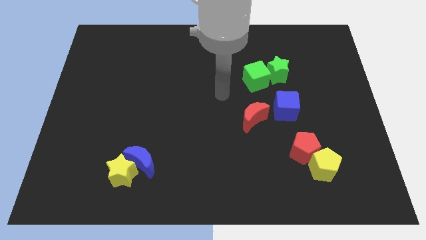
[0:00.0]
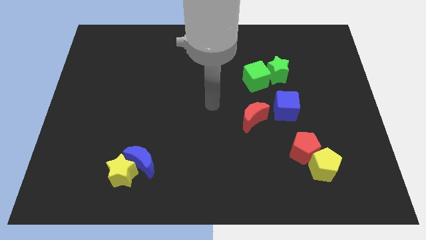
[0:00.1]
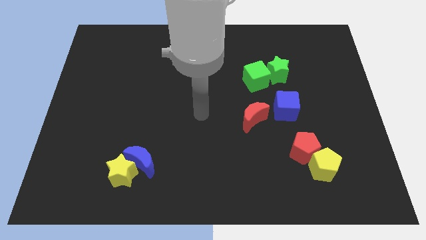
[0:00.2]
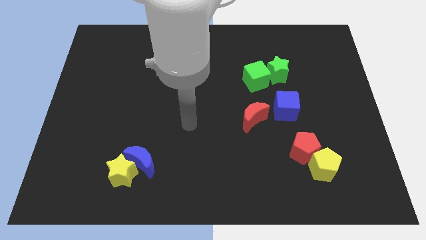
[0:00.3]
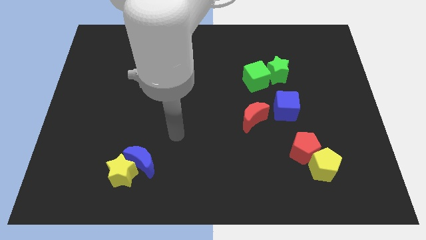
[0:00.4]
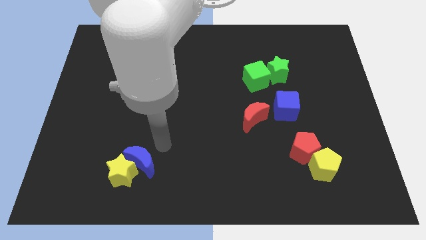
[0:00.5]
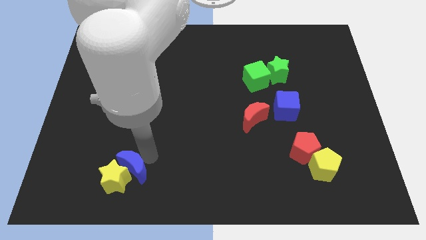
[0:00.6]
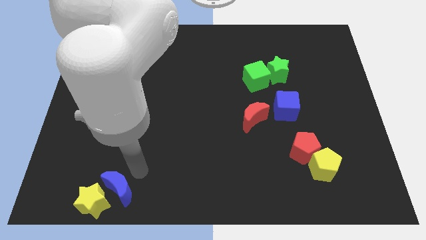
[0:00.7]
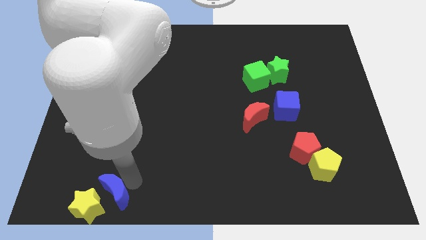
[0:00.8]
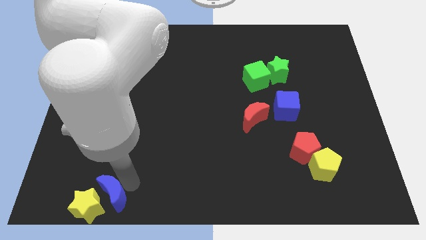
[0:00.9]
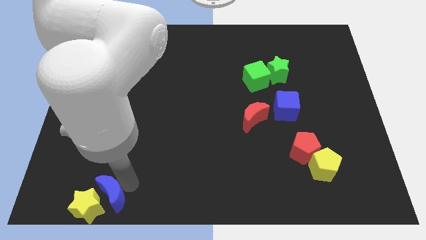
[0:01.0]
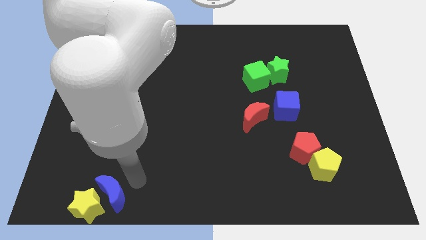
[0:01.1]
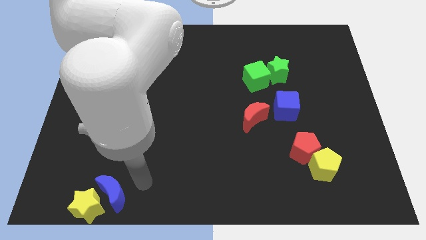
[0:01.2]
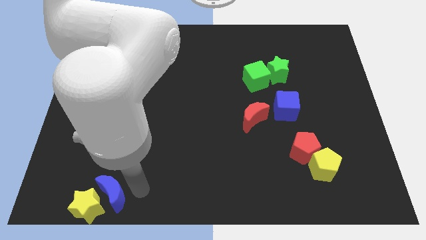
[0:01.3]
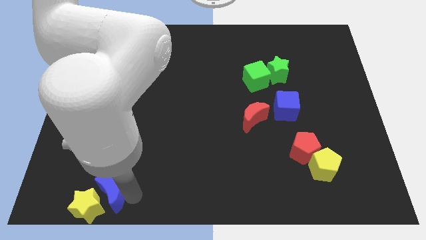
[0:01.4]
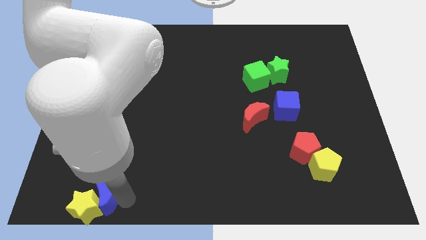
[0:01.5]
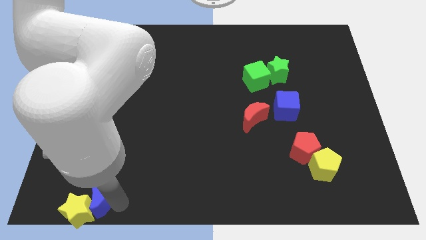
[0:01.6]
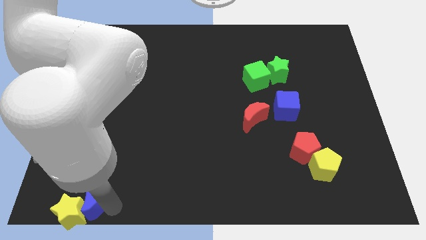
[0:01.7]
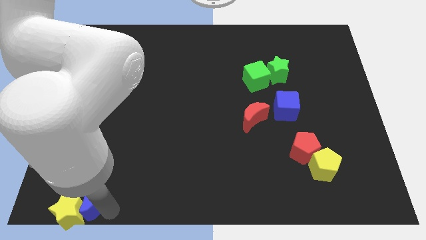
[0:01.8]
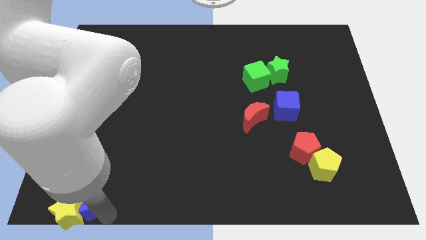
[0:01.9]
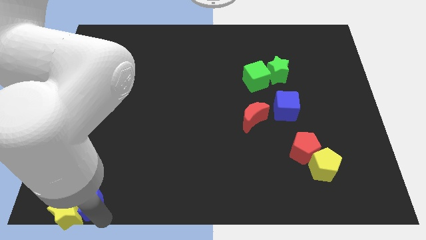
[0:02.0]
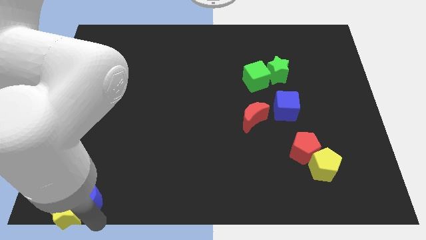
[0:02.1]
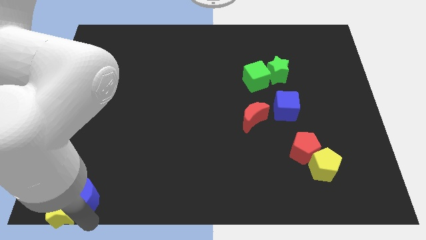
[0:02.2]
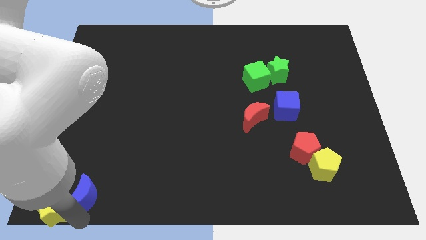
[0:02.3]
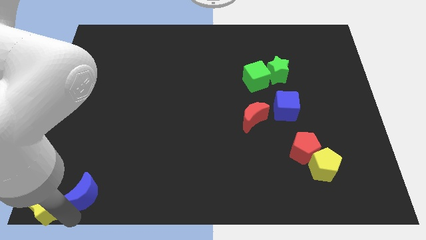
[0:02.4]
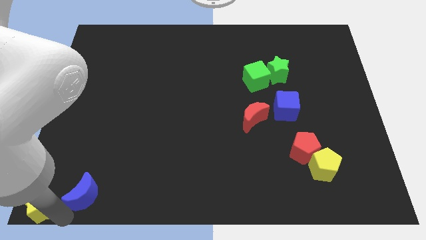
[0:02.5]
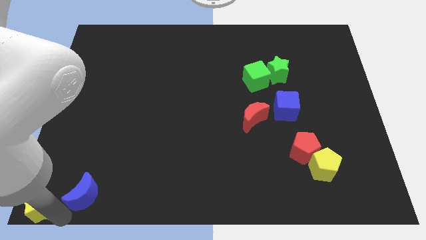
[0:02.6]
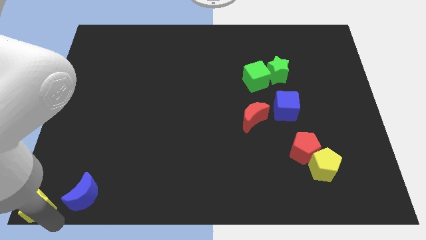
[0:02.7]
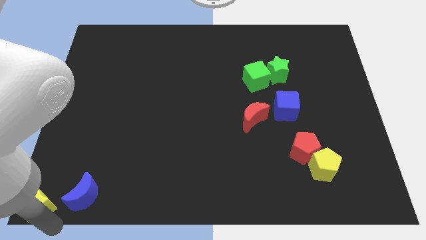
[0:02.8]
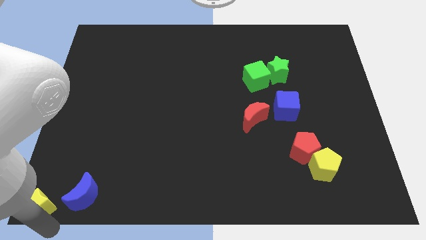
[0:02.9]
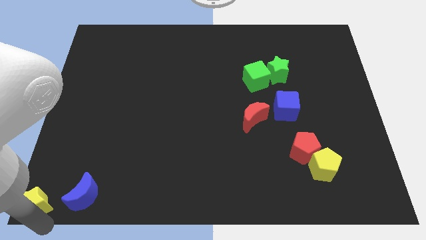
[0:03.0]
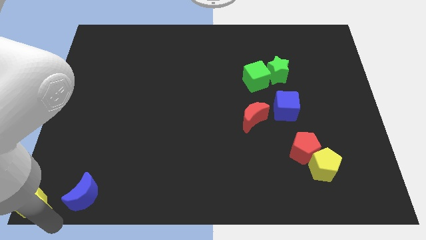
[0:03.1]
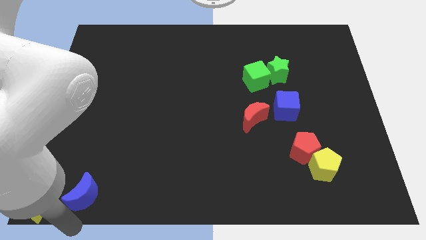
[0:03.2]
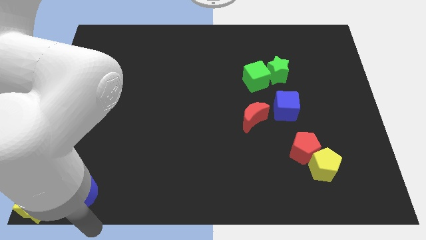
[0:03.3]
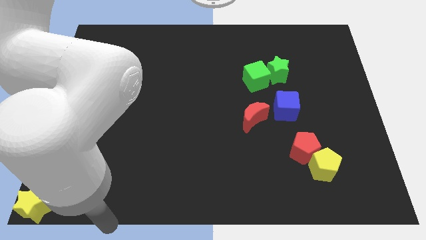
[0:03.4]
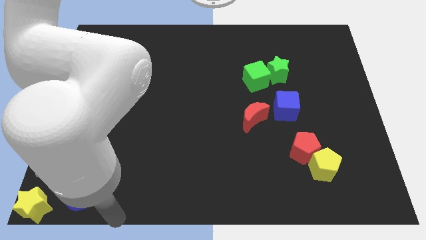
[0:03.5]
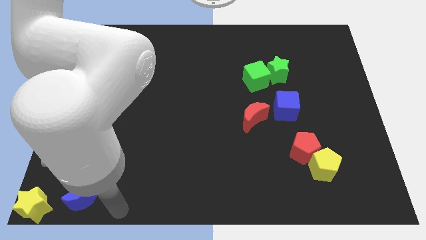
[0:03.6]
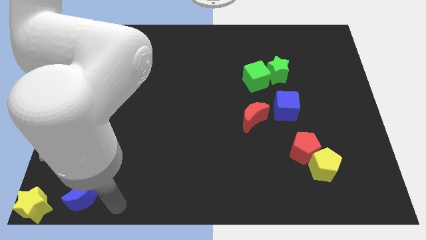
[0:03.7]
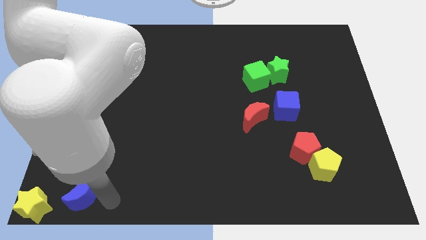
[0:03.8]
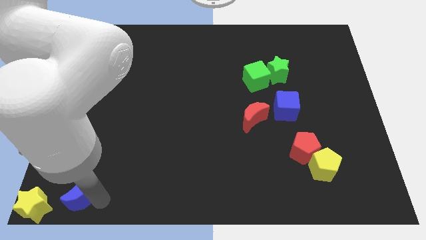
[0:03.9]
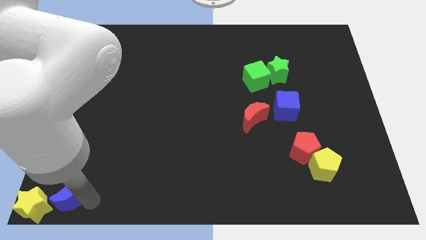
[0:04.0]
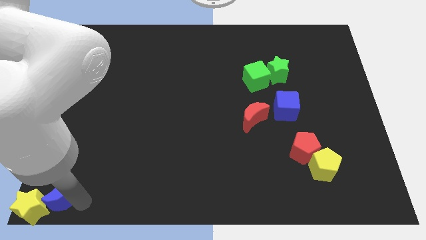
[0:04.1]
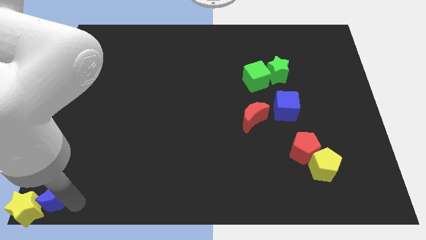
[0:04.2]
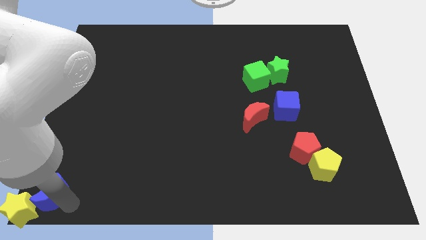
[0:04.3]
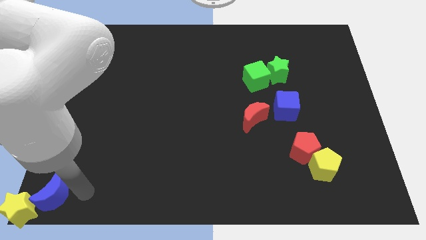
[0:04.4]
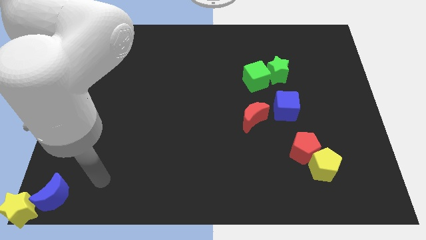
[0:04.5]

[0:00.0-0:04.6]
push the yellow star and blue moon to the bottom left corner of the board

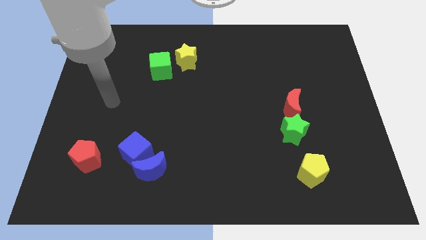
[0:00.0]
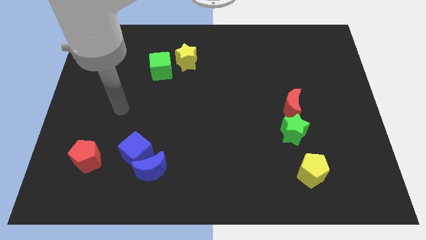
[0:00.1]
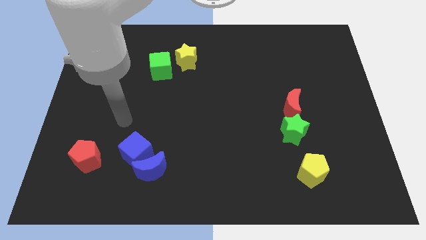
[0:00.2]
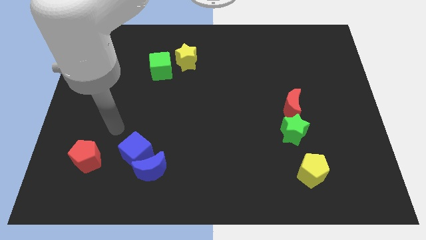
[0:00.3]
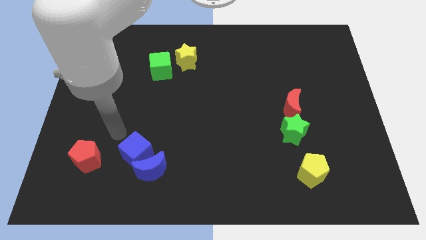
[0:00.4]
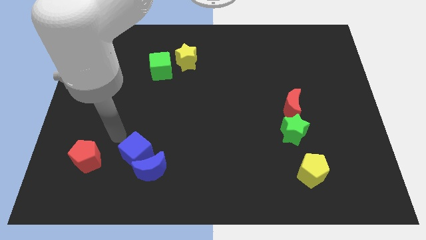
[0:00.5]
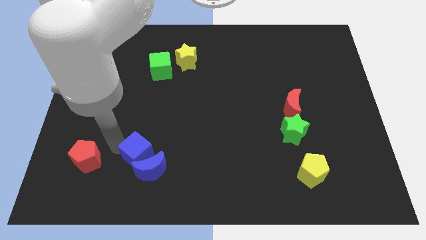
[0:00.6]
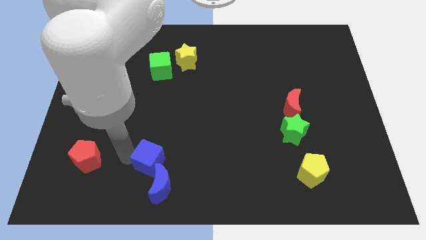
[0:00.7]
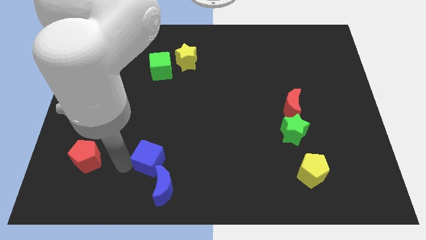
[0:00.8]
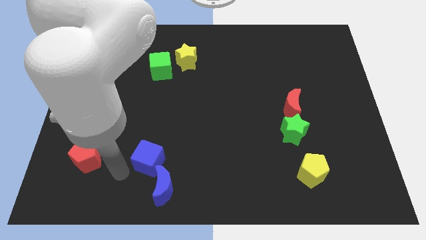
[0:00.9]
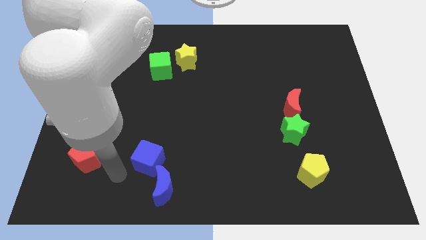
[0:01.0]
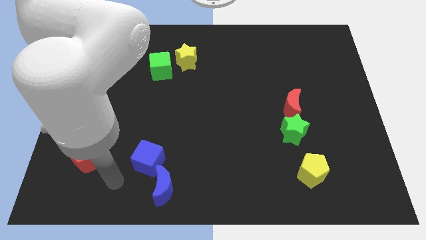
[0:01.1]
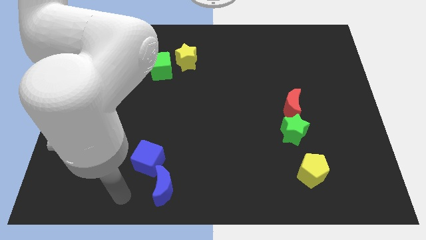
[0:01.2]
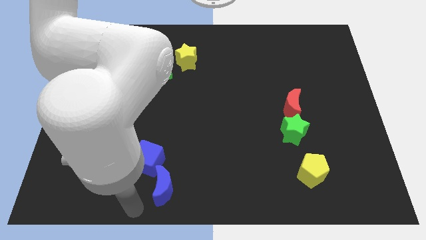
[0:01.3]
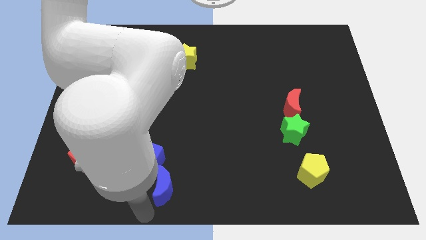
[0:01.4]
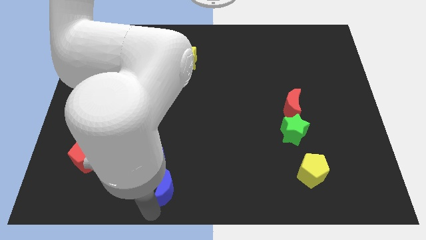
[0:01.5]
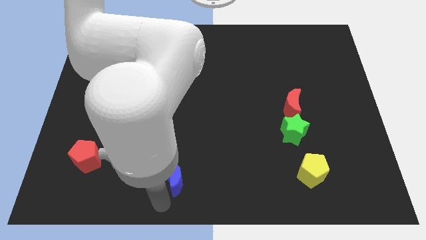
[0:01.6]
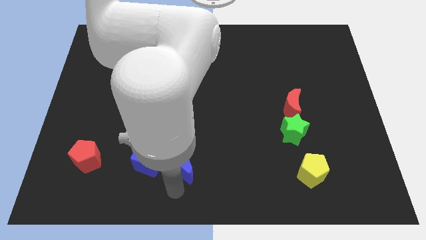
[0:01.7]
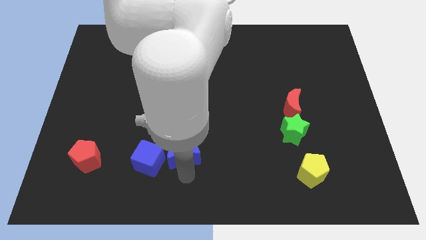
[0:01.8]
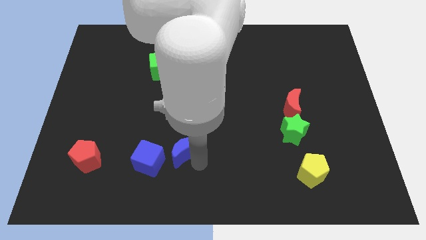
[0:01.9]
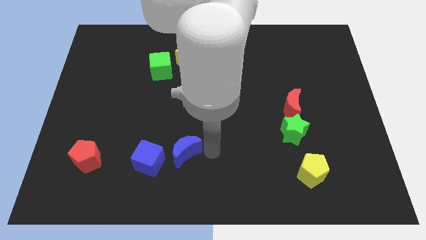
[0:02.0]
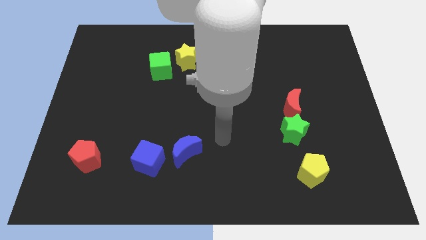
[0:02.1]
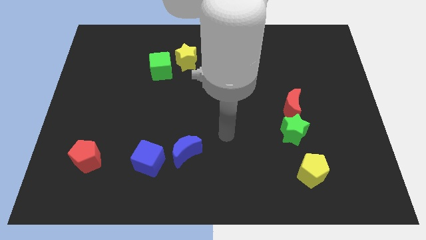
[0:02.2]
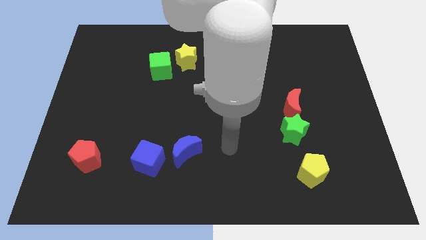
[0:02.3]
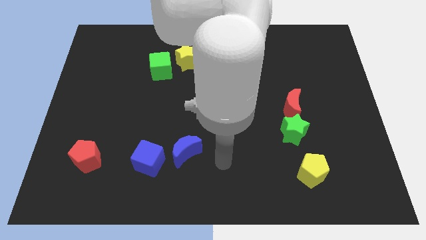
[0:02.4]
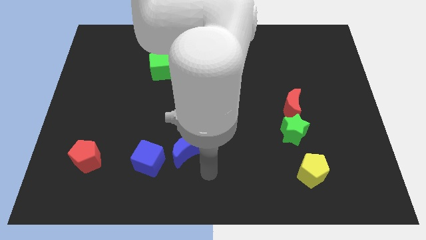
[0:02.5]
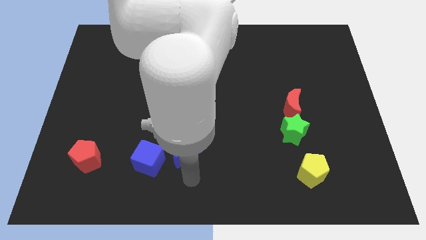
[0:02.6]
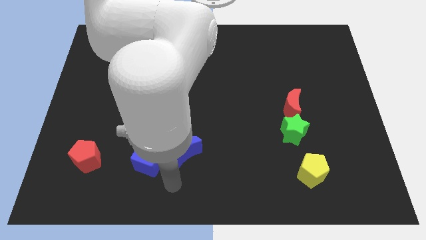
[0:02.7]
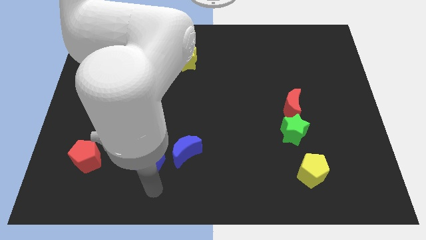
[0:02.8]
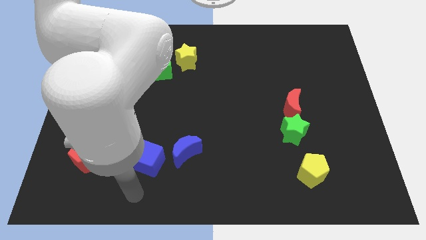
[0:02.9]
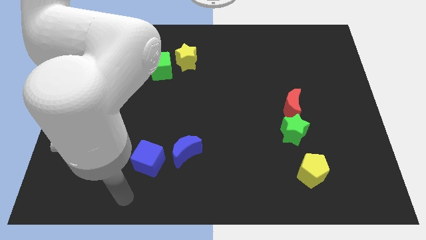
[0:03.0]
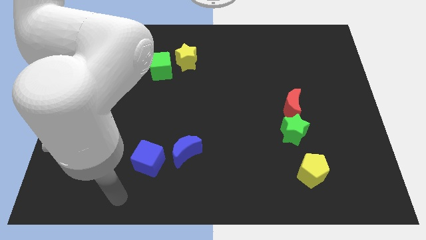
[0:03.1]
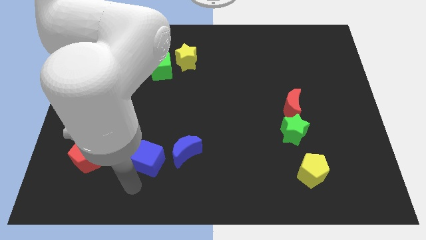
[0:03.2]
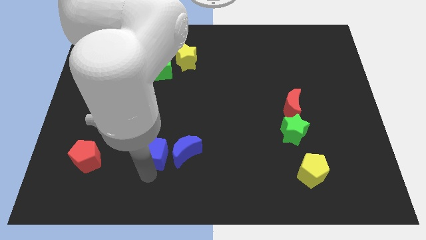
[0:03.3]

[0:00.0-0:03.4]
separate the blue moon and blue cube

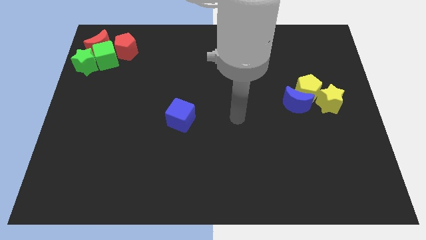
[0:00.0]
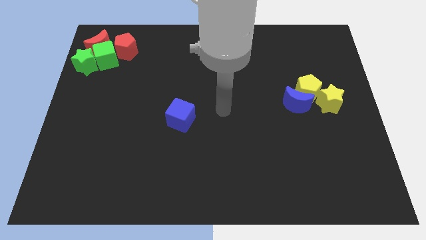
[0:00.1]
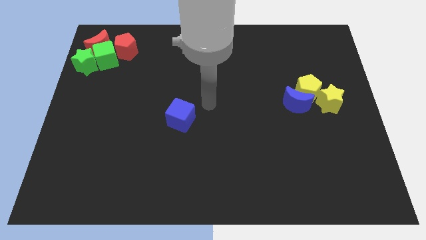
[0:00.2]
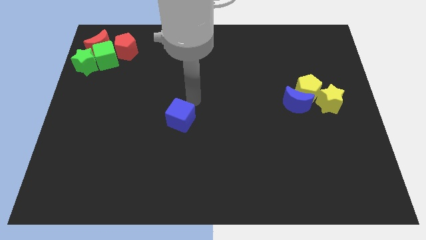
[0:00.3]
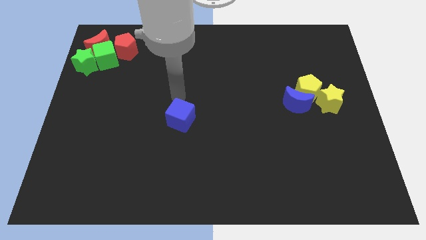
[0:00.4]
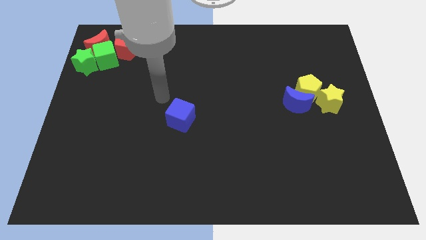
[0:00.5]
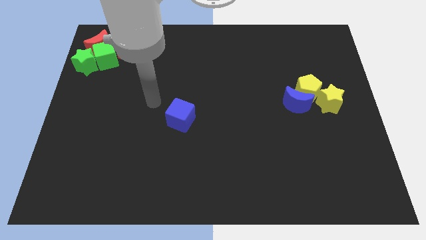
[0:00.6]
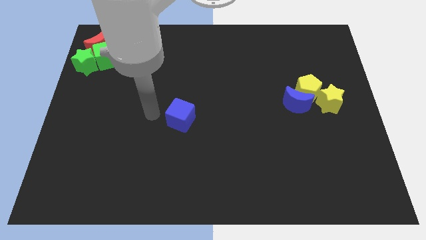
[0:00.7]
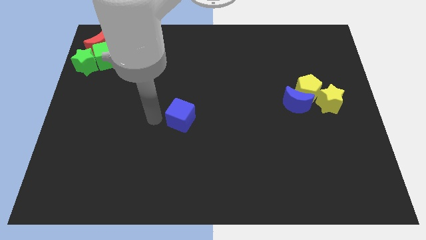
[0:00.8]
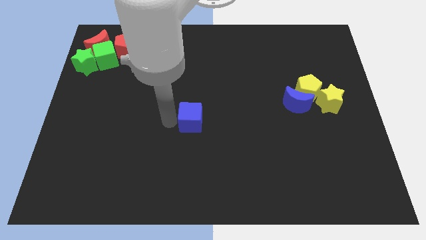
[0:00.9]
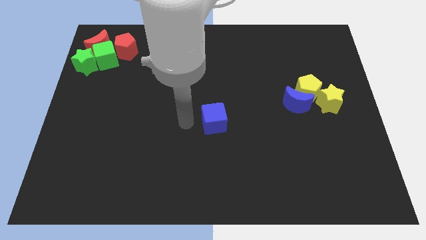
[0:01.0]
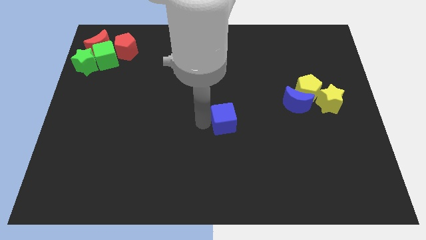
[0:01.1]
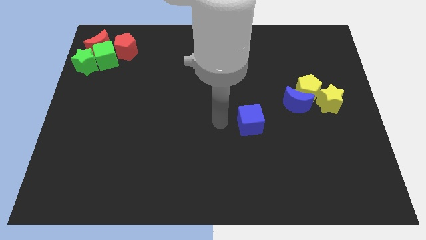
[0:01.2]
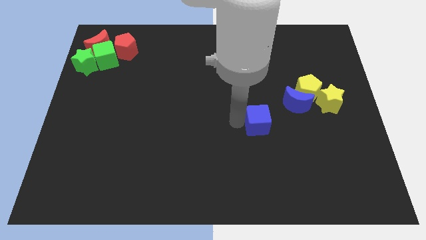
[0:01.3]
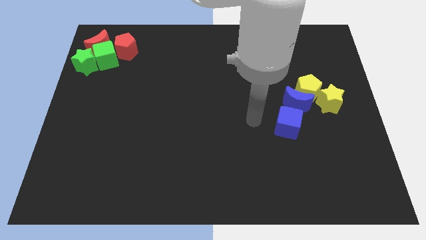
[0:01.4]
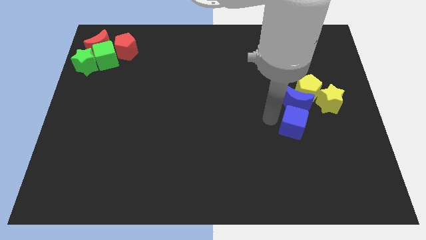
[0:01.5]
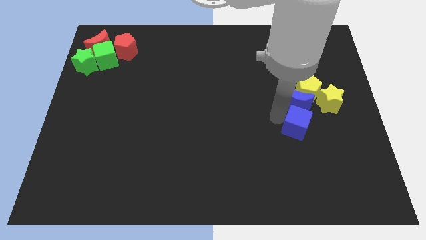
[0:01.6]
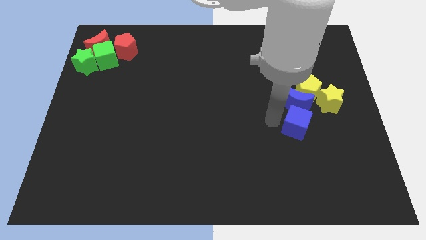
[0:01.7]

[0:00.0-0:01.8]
move the blue cube to the bottom of blue crescent
